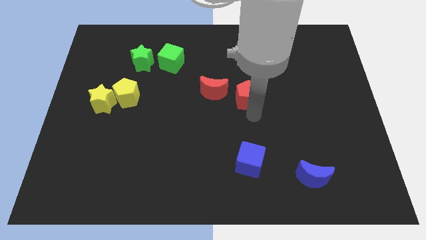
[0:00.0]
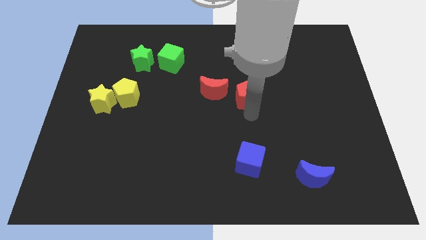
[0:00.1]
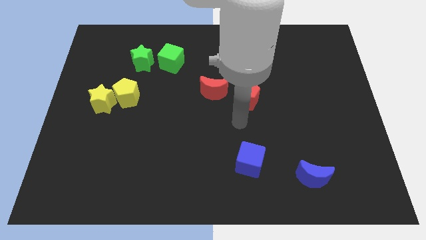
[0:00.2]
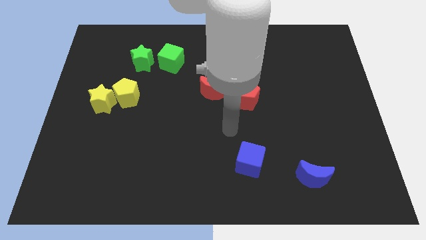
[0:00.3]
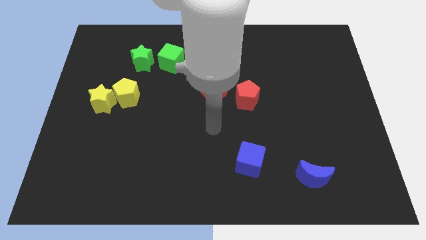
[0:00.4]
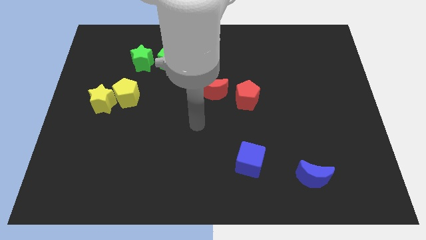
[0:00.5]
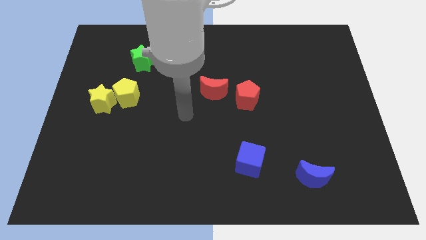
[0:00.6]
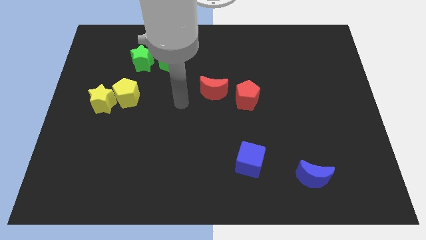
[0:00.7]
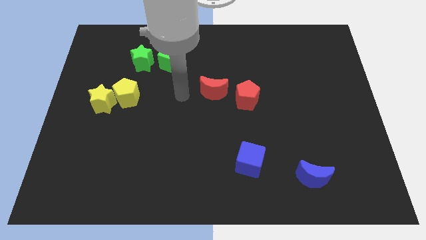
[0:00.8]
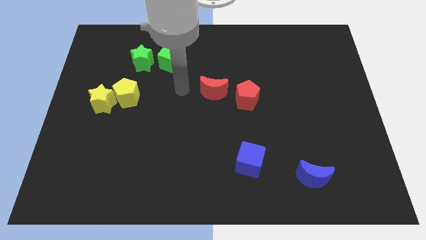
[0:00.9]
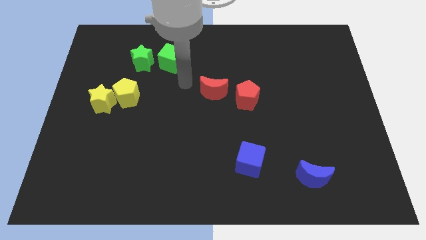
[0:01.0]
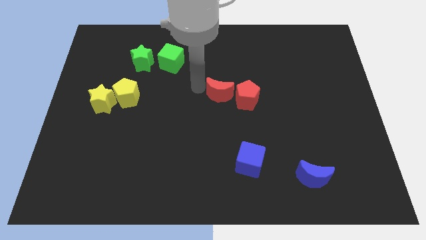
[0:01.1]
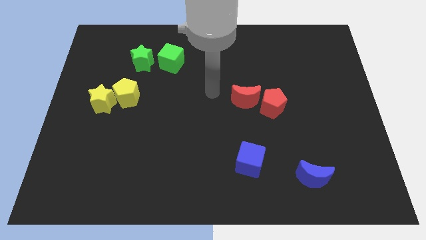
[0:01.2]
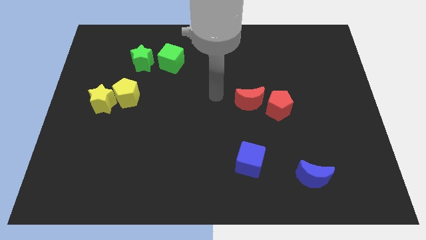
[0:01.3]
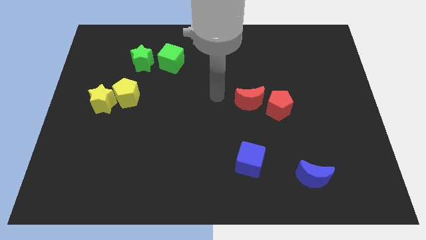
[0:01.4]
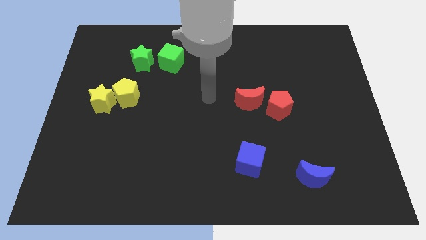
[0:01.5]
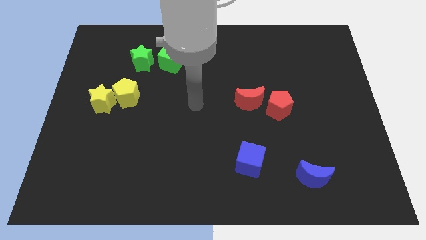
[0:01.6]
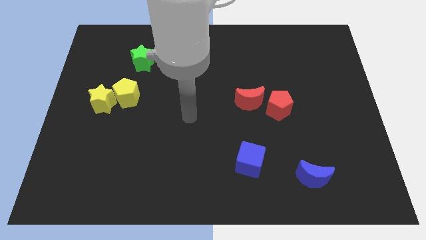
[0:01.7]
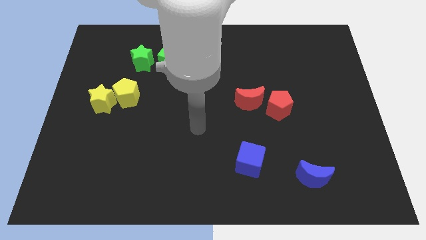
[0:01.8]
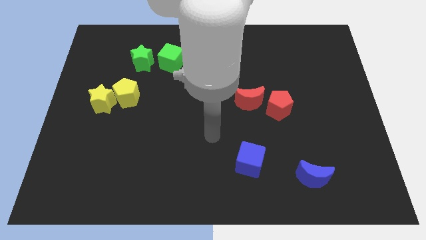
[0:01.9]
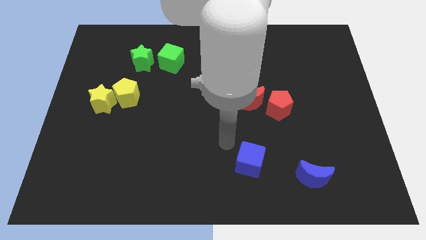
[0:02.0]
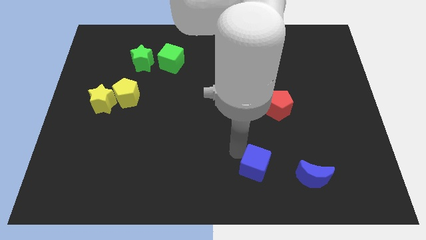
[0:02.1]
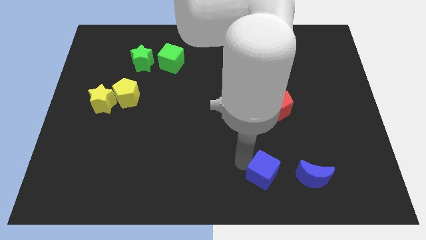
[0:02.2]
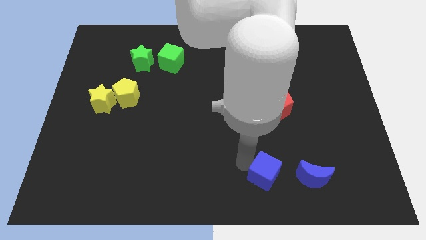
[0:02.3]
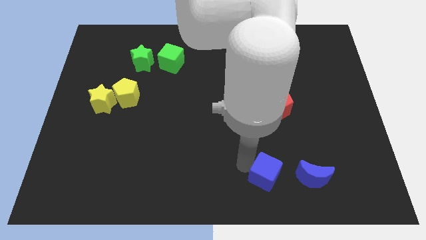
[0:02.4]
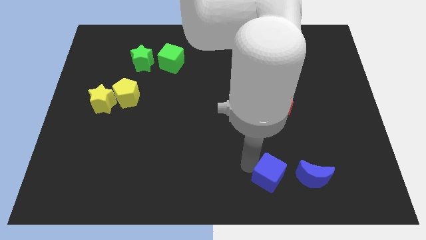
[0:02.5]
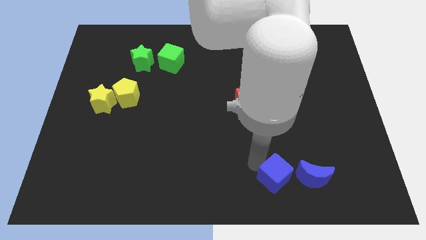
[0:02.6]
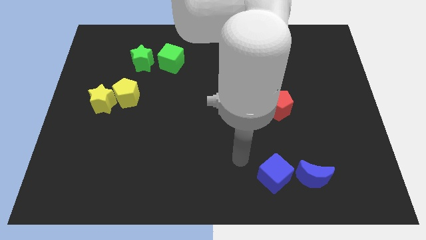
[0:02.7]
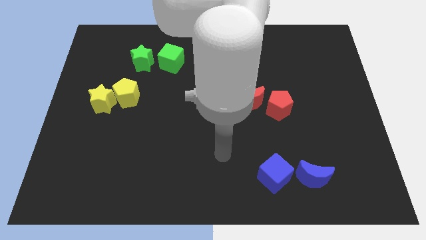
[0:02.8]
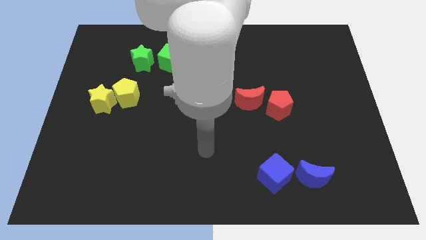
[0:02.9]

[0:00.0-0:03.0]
push both the red blocks and both blue blocks together to the right side of the board

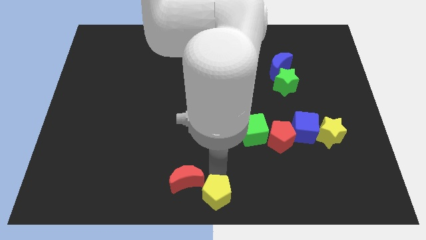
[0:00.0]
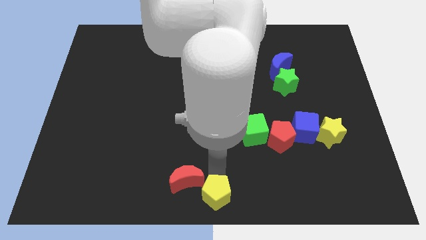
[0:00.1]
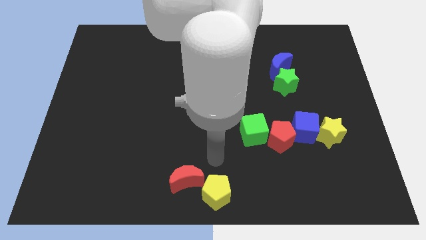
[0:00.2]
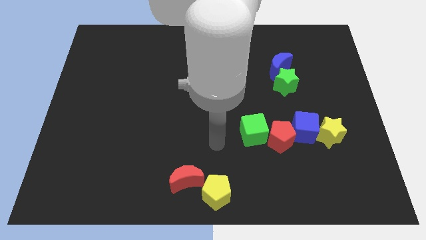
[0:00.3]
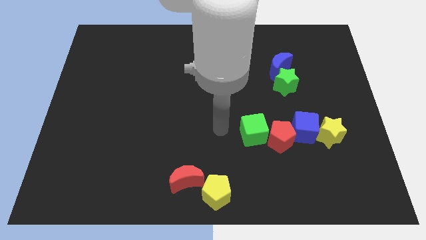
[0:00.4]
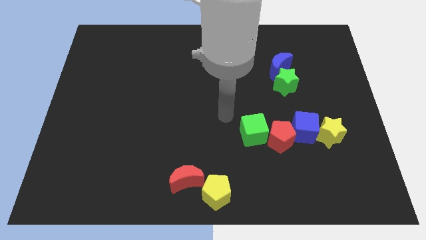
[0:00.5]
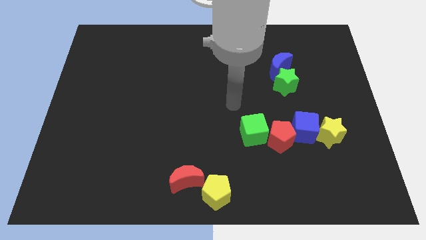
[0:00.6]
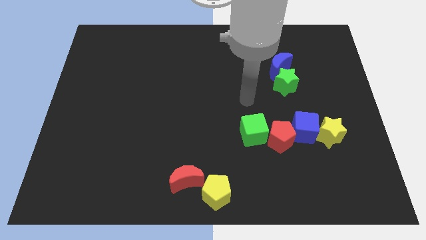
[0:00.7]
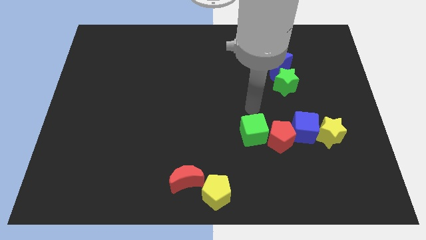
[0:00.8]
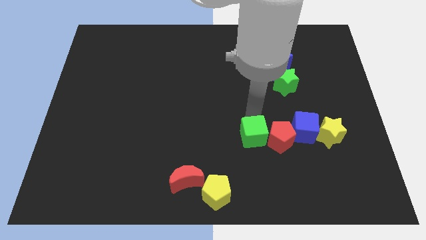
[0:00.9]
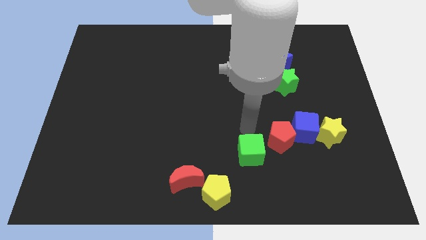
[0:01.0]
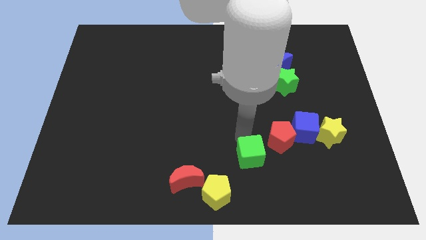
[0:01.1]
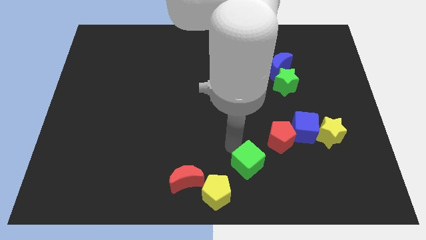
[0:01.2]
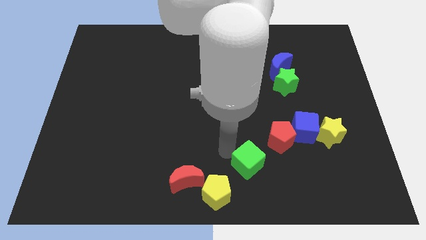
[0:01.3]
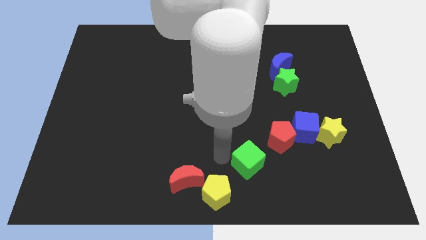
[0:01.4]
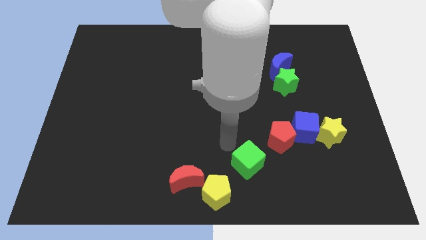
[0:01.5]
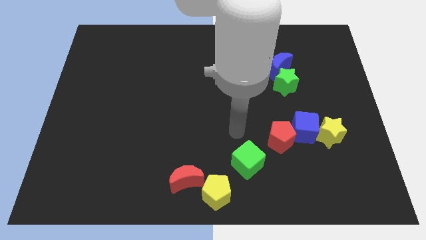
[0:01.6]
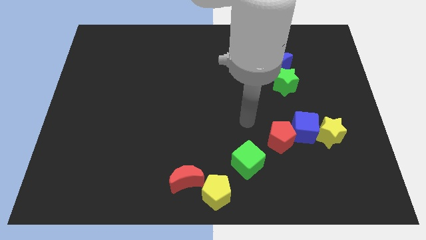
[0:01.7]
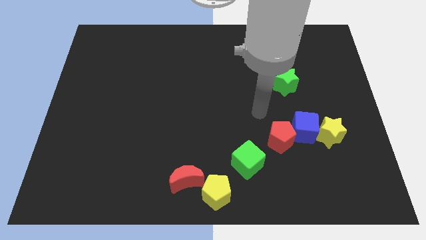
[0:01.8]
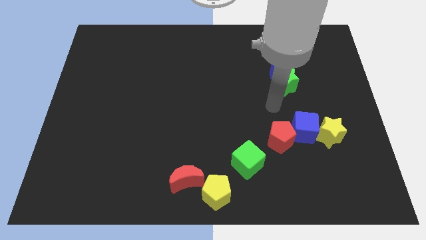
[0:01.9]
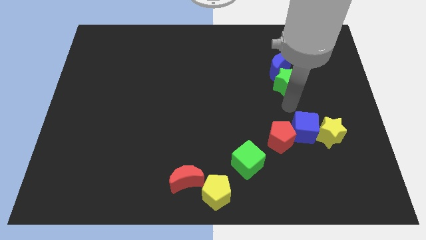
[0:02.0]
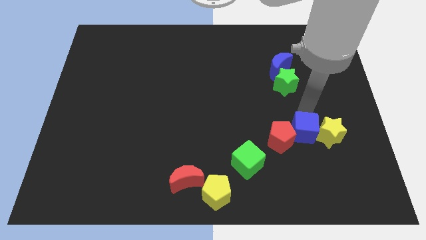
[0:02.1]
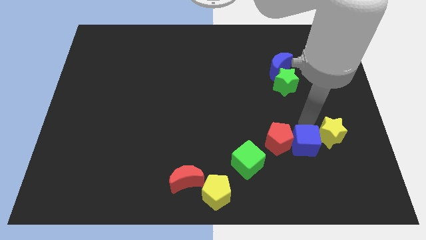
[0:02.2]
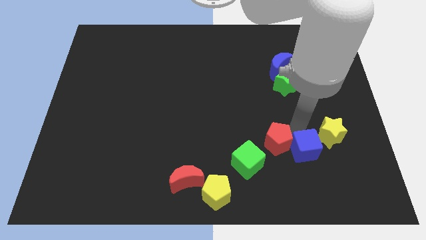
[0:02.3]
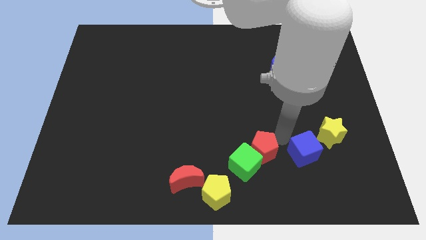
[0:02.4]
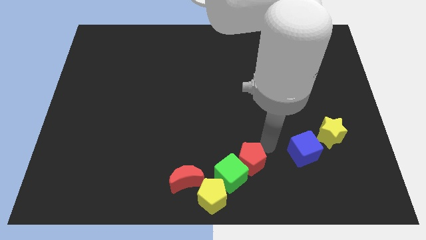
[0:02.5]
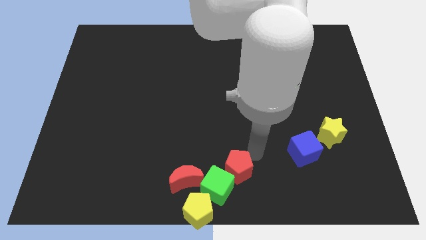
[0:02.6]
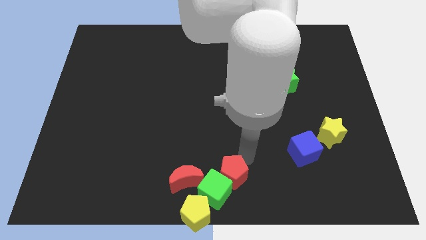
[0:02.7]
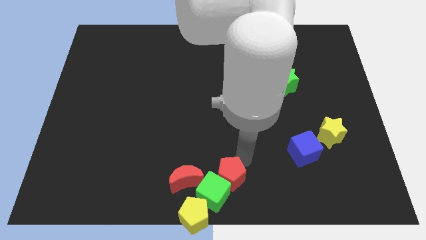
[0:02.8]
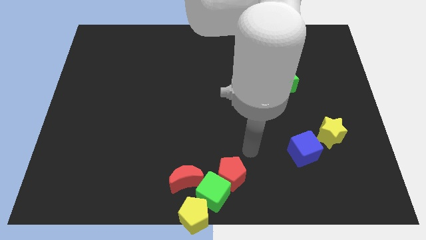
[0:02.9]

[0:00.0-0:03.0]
slide the red pentagon and green cube into the top right side of the yellow pentagon

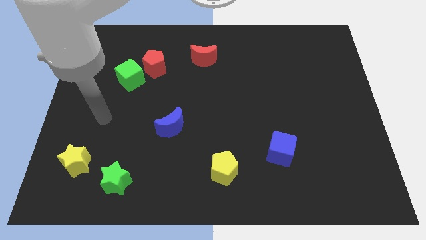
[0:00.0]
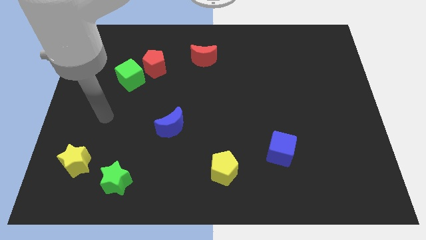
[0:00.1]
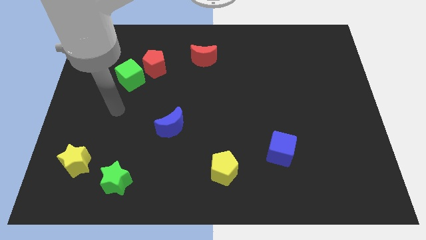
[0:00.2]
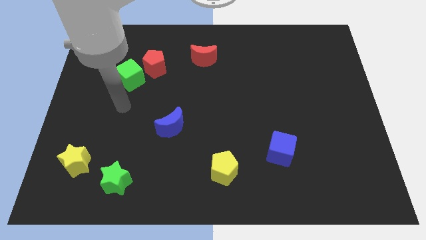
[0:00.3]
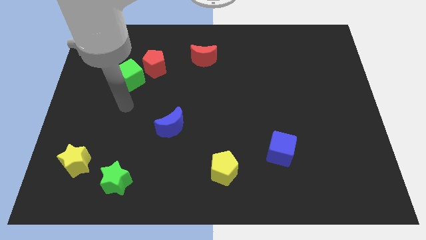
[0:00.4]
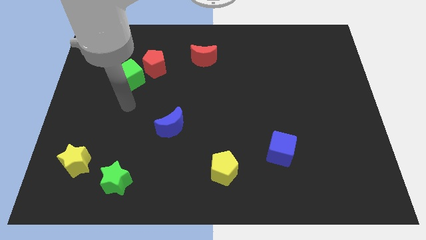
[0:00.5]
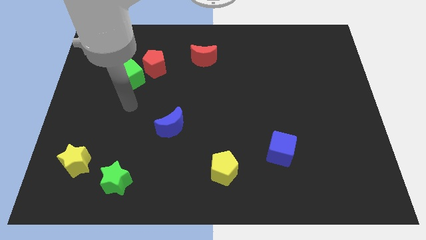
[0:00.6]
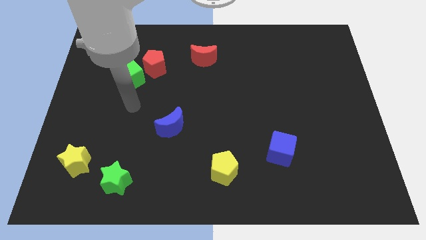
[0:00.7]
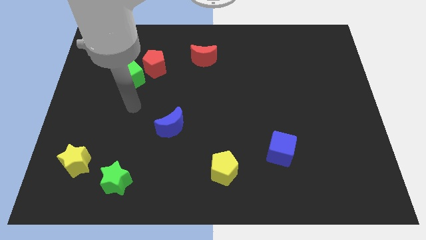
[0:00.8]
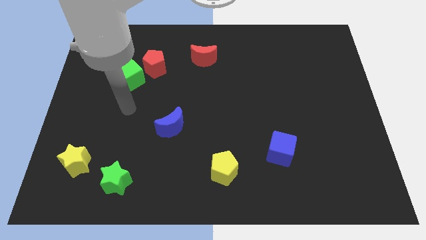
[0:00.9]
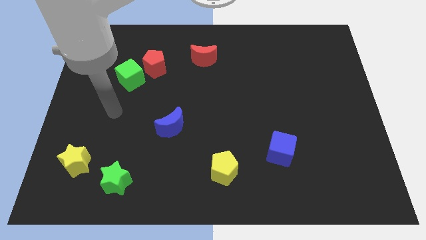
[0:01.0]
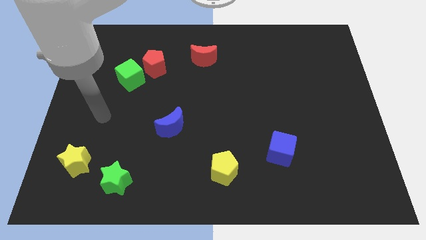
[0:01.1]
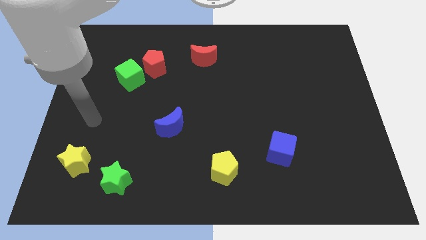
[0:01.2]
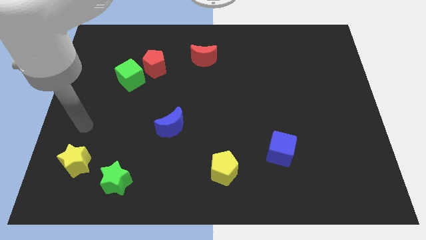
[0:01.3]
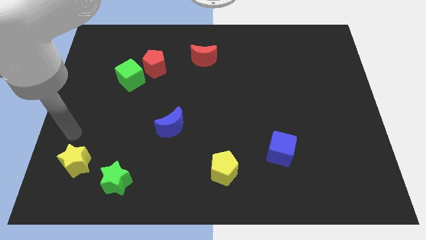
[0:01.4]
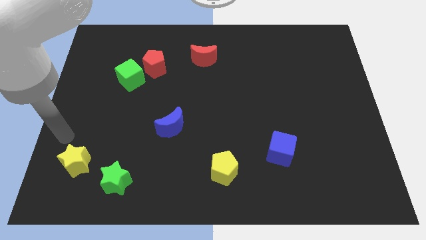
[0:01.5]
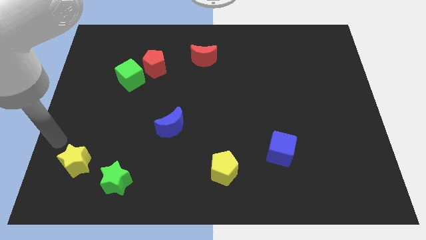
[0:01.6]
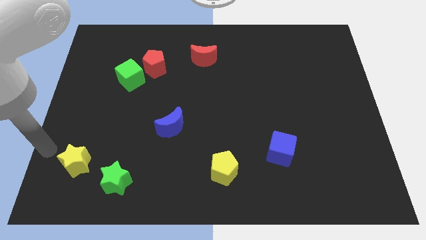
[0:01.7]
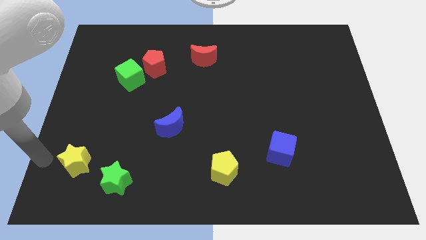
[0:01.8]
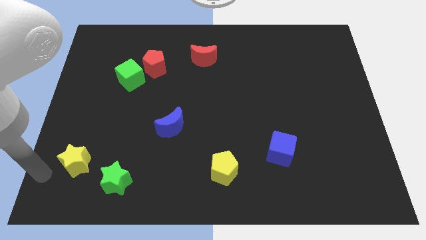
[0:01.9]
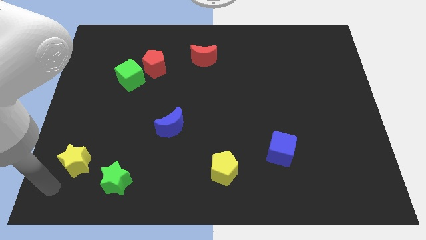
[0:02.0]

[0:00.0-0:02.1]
place your arm to the left side of the green block

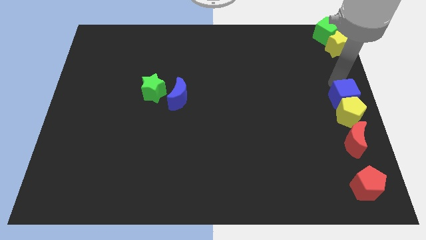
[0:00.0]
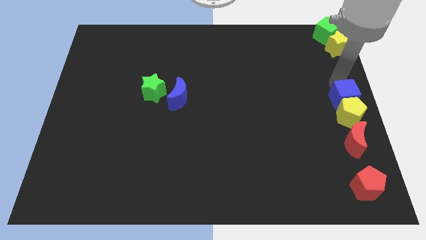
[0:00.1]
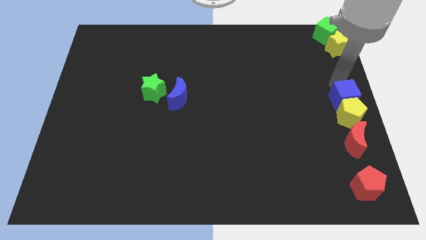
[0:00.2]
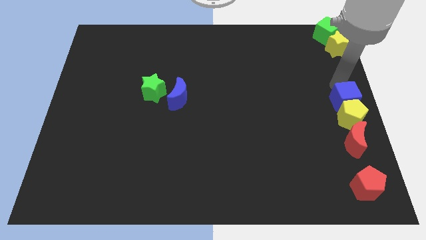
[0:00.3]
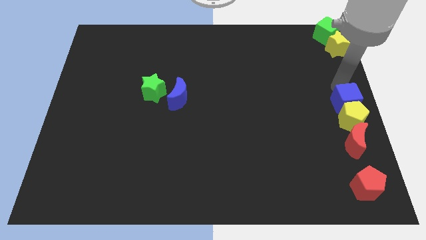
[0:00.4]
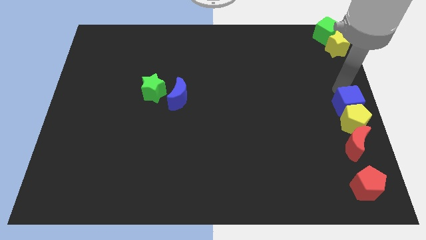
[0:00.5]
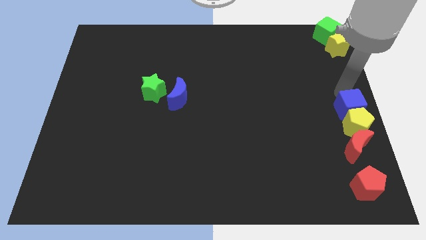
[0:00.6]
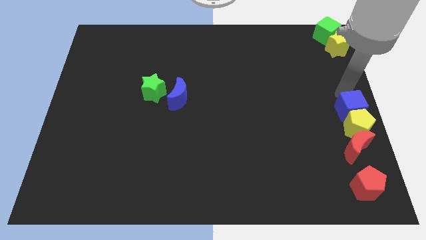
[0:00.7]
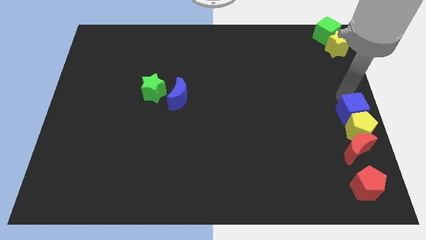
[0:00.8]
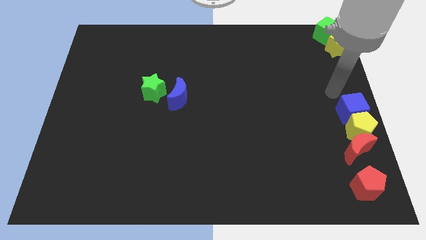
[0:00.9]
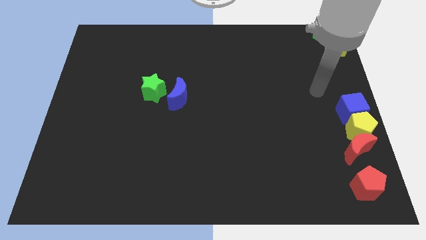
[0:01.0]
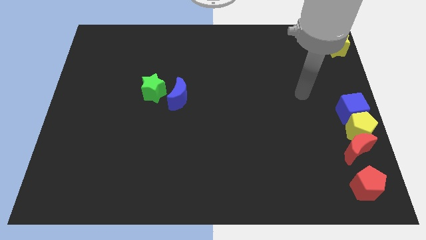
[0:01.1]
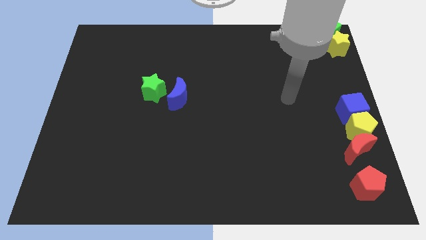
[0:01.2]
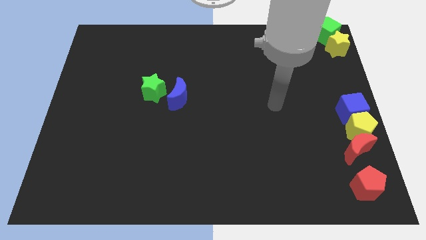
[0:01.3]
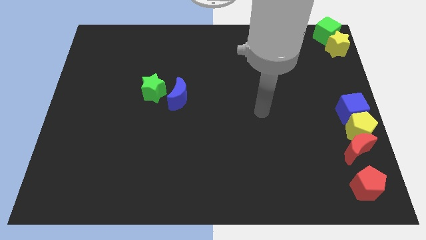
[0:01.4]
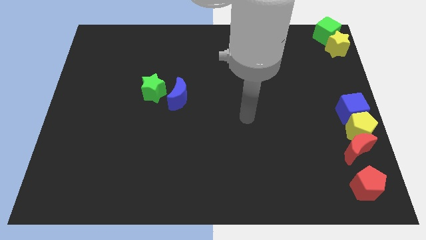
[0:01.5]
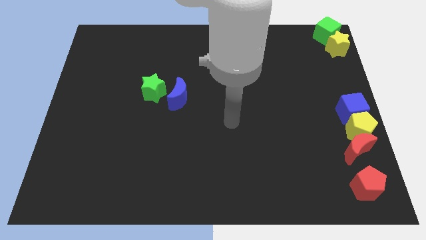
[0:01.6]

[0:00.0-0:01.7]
push the yellow pentagon with the blue cube
